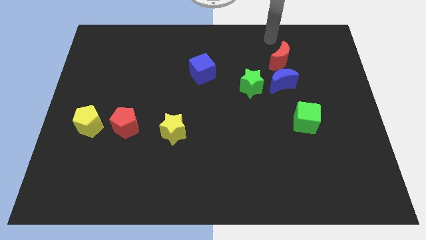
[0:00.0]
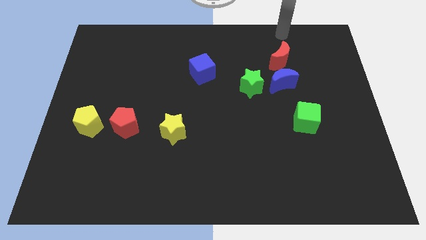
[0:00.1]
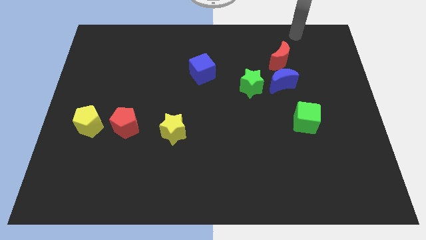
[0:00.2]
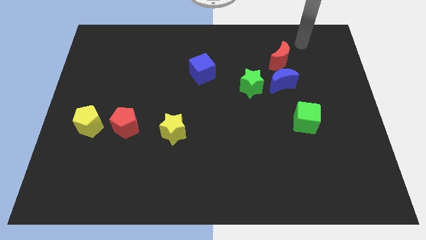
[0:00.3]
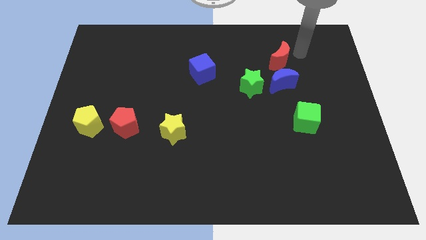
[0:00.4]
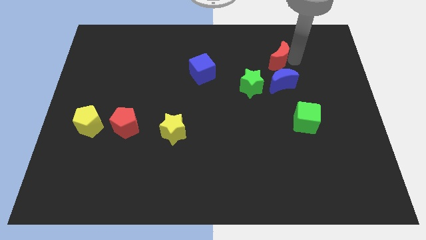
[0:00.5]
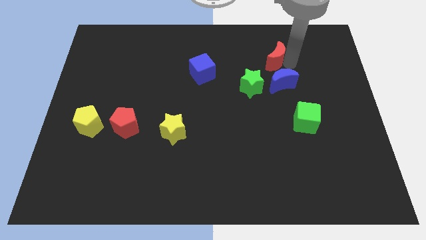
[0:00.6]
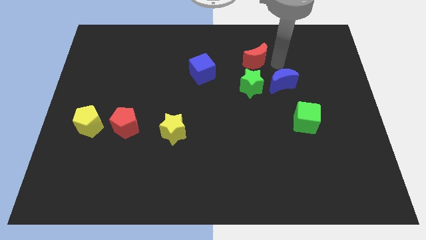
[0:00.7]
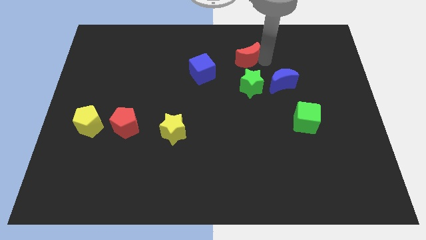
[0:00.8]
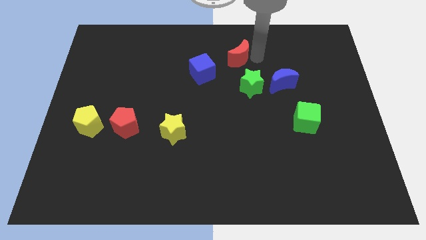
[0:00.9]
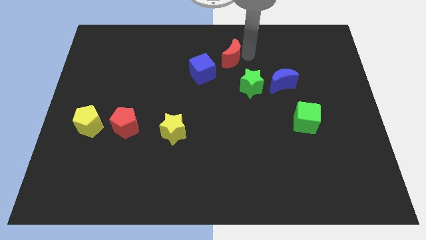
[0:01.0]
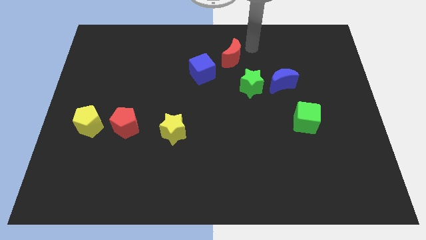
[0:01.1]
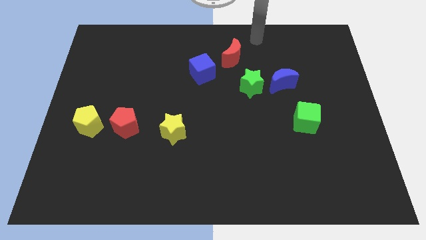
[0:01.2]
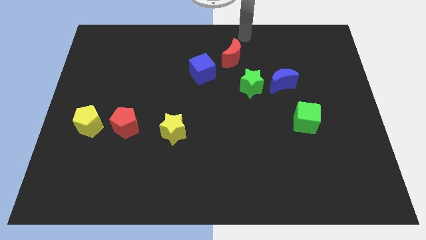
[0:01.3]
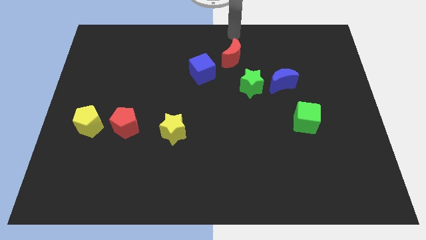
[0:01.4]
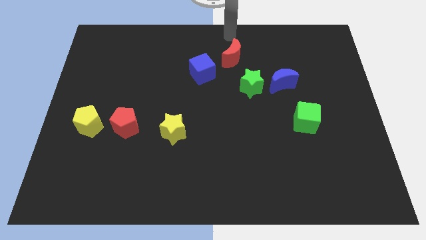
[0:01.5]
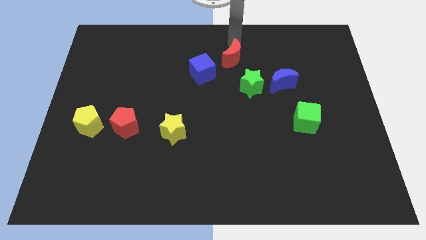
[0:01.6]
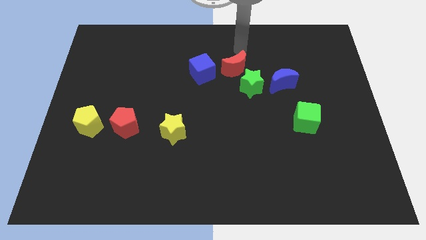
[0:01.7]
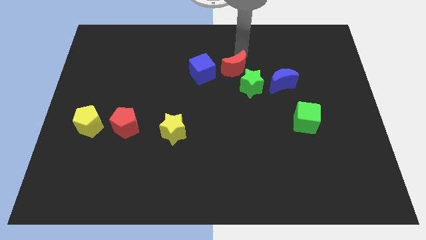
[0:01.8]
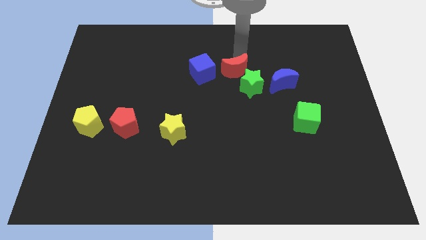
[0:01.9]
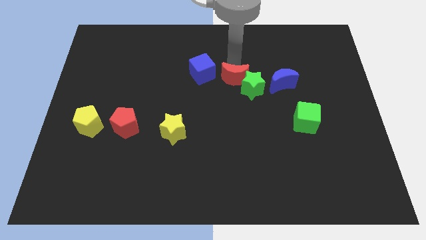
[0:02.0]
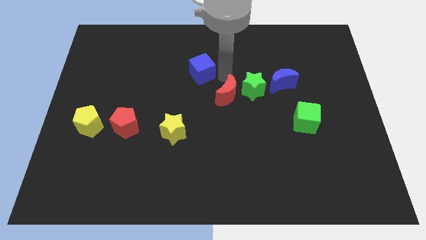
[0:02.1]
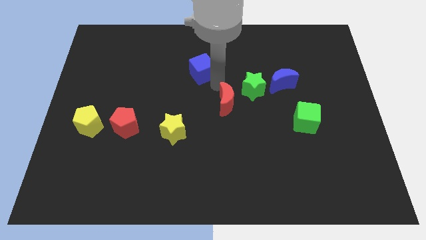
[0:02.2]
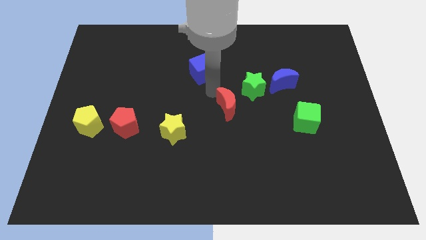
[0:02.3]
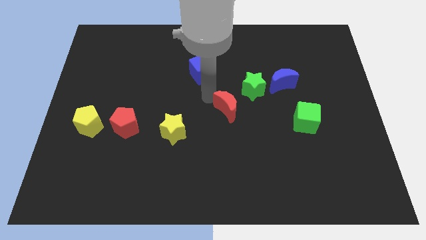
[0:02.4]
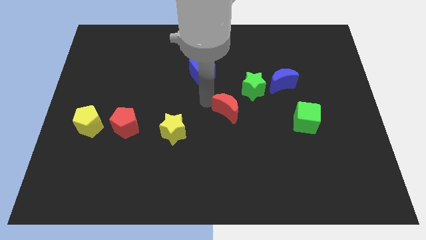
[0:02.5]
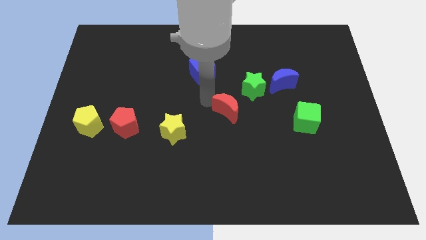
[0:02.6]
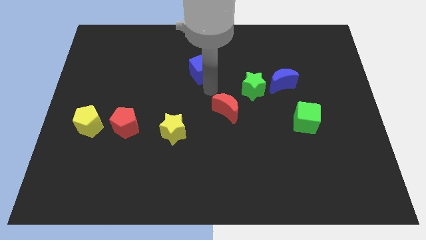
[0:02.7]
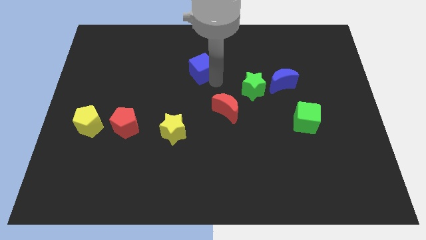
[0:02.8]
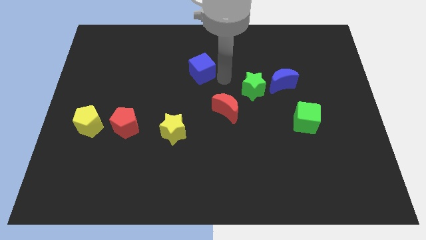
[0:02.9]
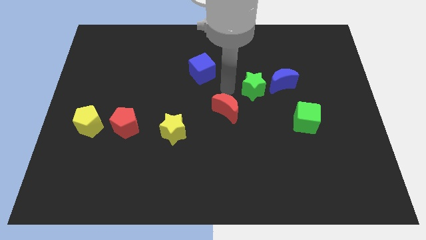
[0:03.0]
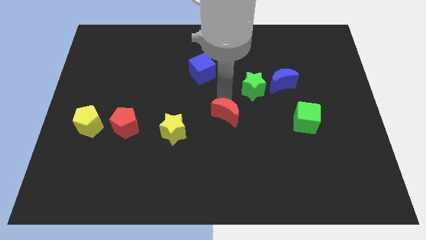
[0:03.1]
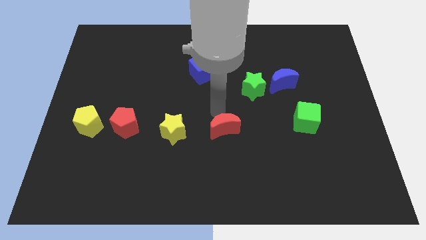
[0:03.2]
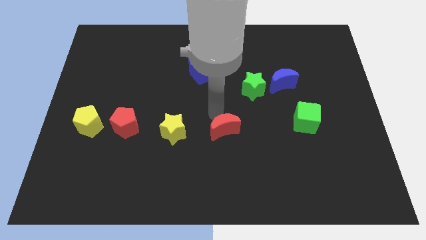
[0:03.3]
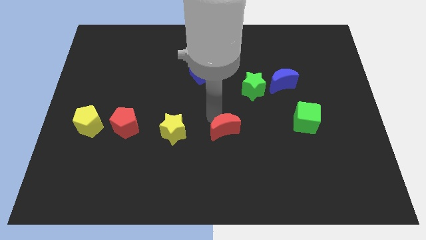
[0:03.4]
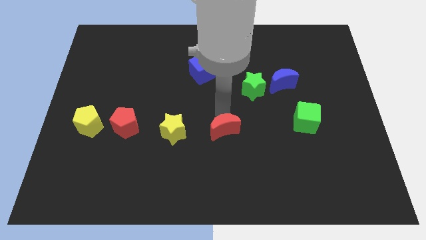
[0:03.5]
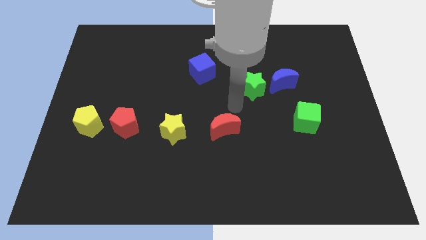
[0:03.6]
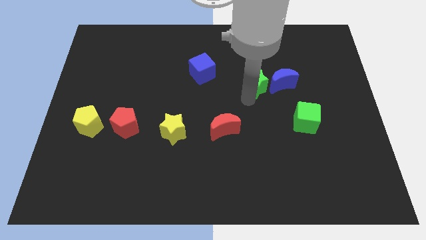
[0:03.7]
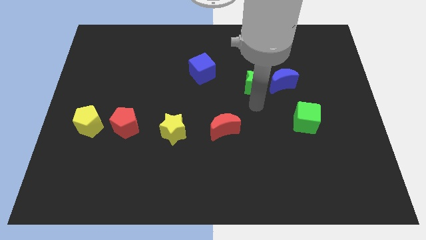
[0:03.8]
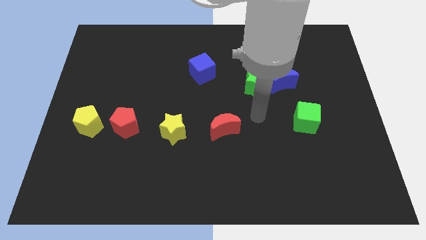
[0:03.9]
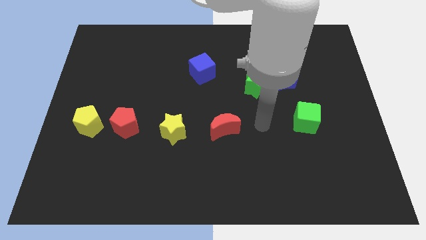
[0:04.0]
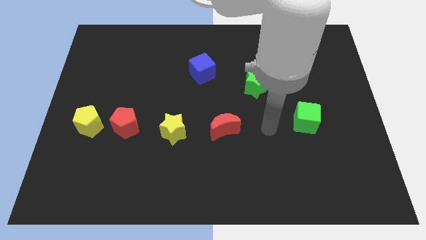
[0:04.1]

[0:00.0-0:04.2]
move the red moon to the right side of the yellow star

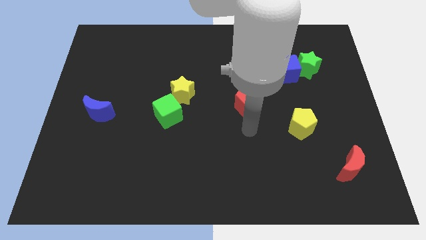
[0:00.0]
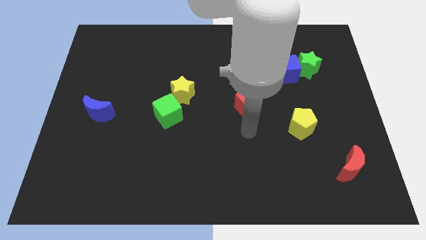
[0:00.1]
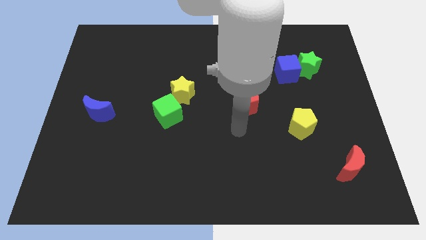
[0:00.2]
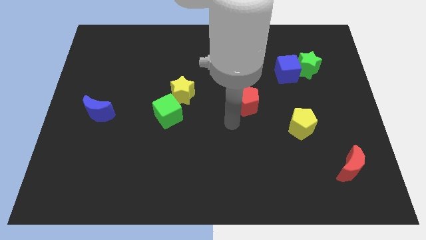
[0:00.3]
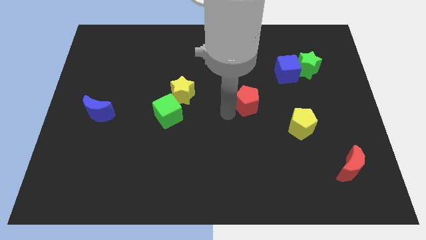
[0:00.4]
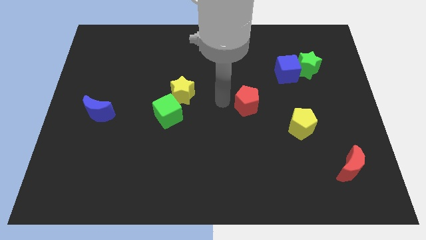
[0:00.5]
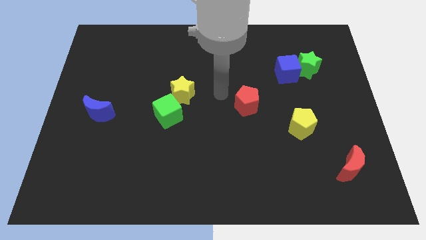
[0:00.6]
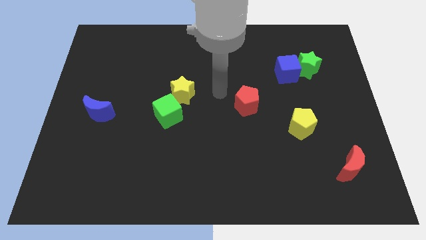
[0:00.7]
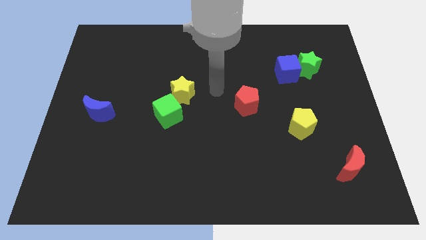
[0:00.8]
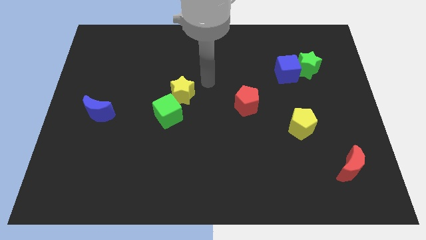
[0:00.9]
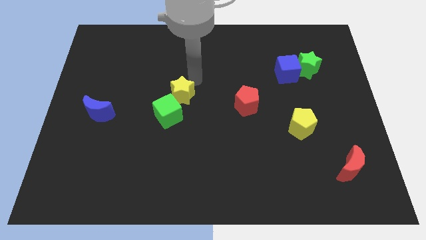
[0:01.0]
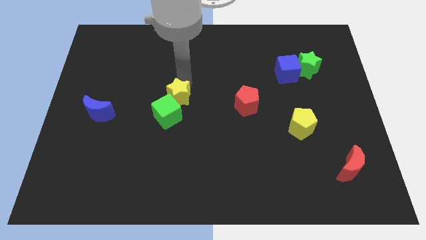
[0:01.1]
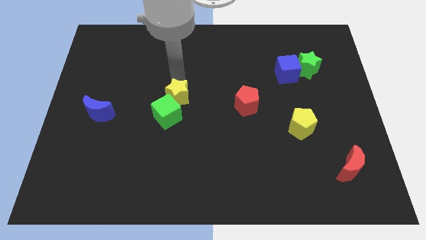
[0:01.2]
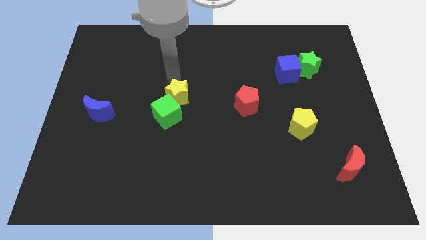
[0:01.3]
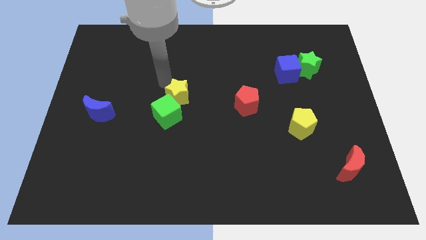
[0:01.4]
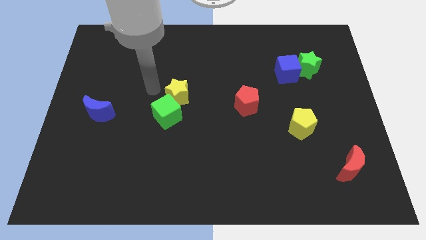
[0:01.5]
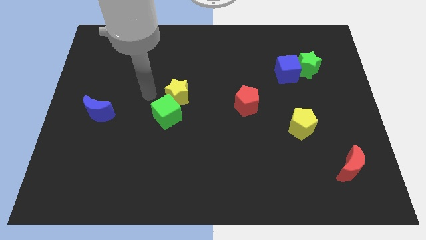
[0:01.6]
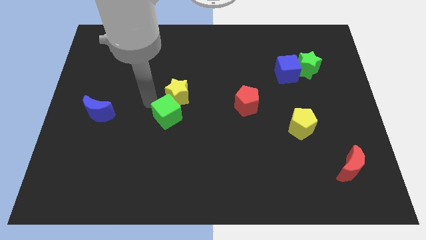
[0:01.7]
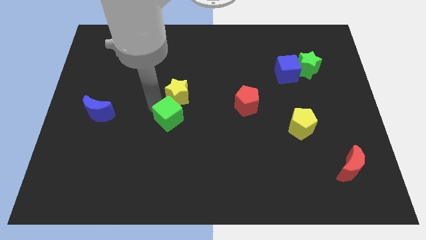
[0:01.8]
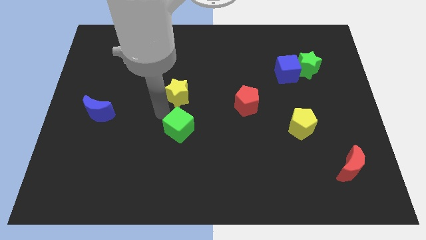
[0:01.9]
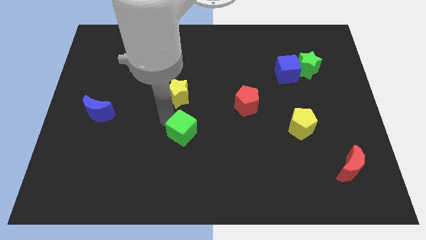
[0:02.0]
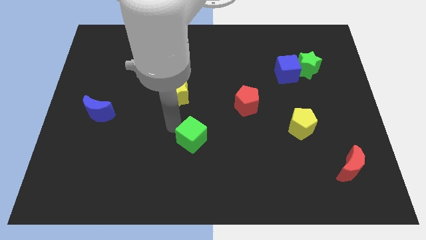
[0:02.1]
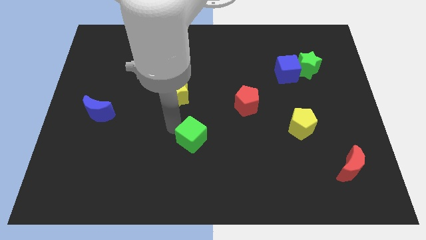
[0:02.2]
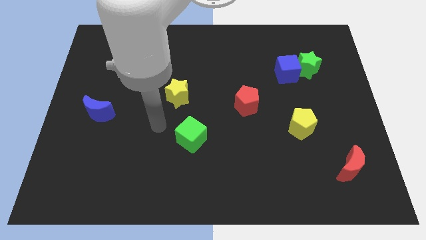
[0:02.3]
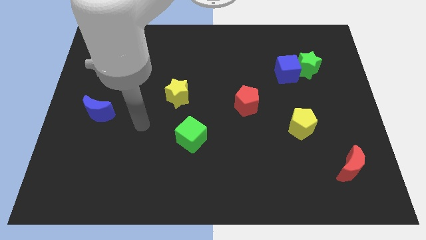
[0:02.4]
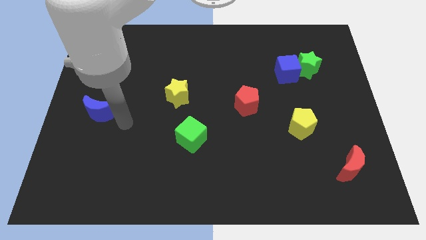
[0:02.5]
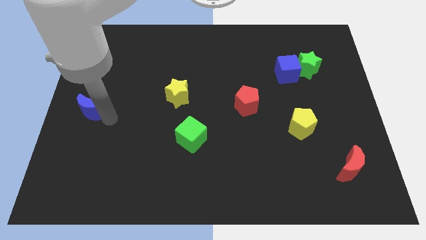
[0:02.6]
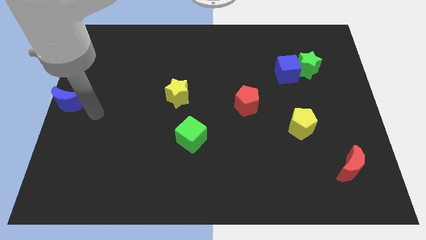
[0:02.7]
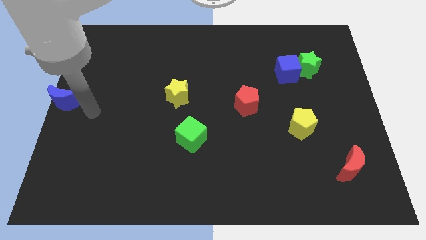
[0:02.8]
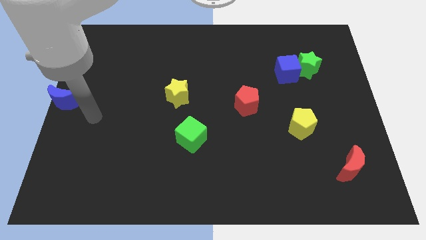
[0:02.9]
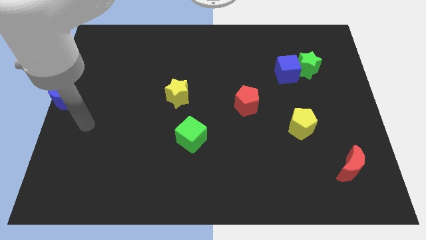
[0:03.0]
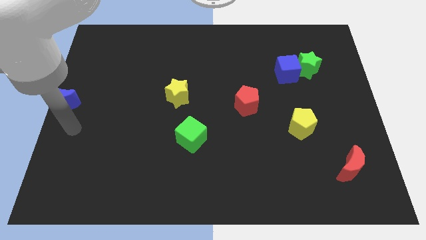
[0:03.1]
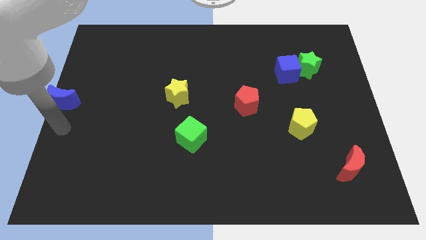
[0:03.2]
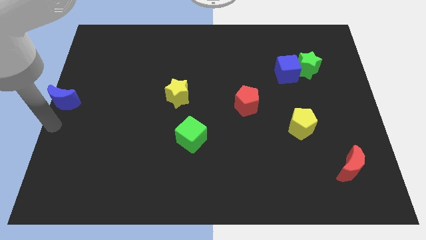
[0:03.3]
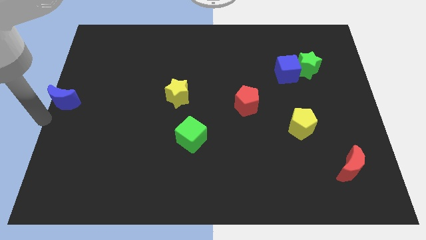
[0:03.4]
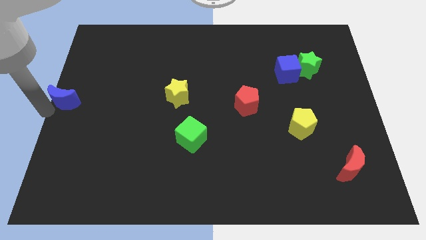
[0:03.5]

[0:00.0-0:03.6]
place blue moon to the left center of the board

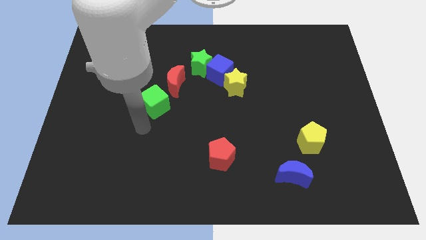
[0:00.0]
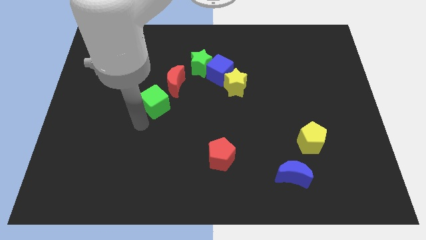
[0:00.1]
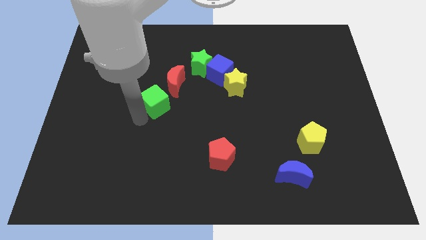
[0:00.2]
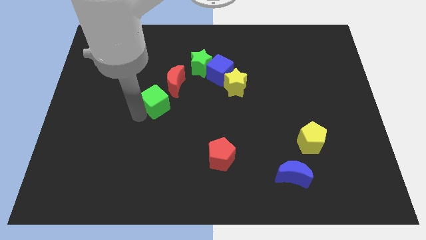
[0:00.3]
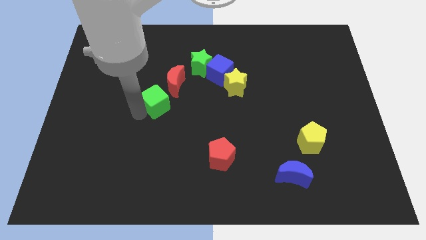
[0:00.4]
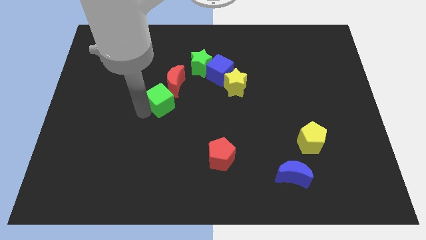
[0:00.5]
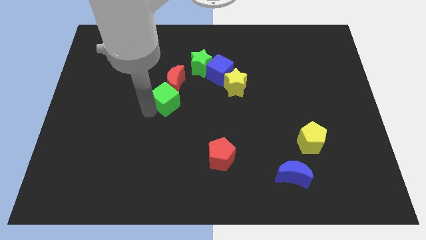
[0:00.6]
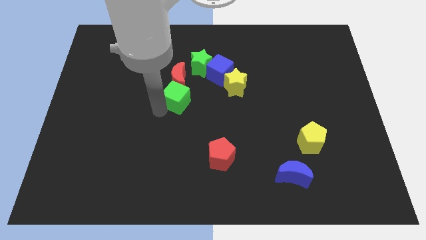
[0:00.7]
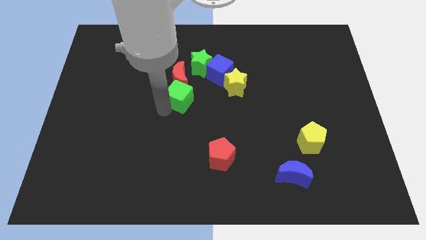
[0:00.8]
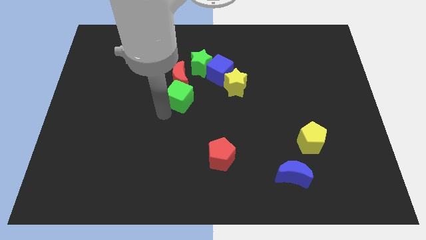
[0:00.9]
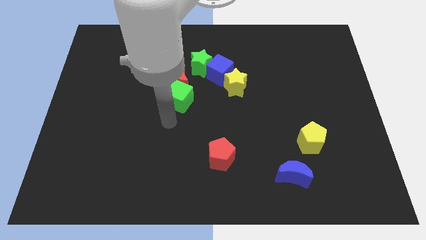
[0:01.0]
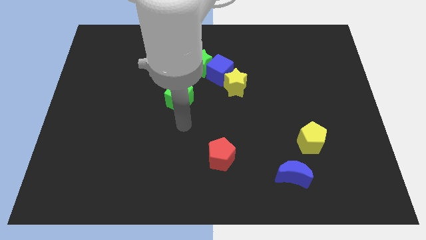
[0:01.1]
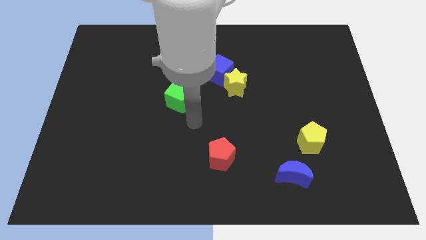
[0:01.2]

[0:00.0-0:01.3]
push the green cube into the red moon
